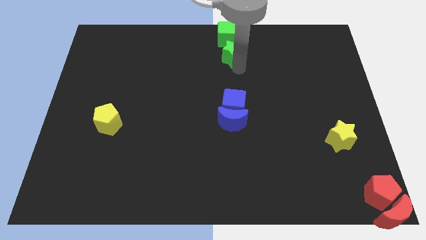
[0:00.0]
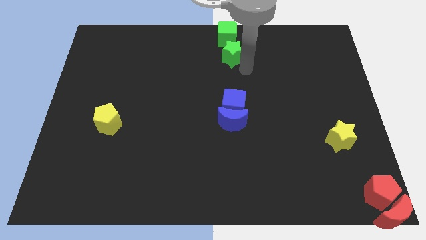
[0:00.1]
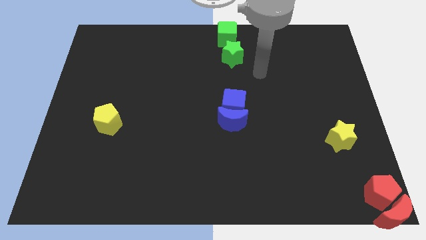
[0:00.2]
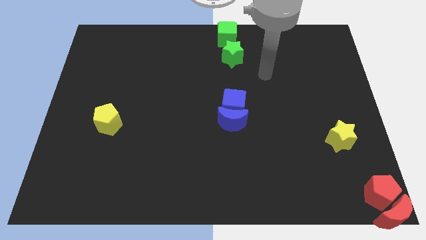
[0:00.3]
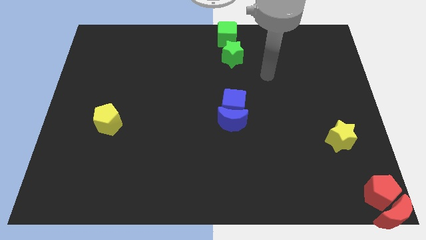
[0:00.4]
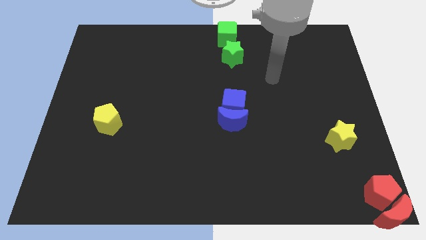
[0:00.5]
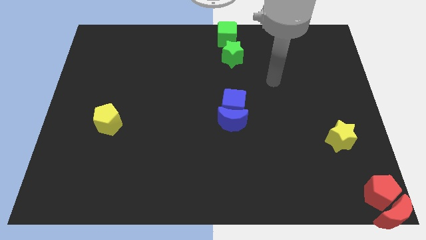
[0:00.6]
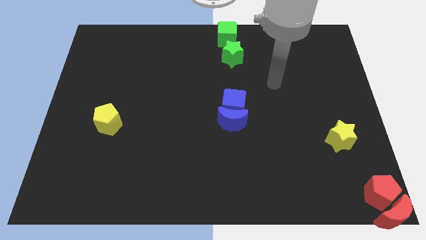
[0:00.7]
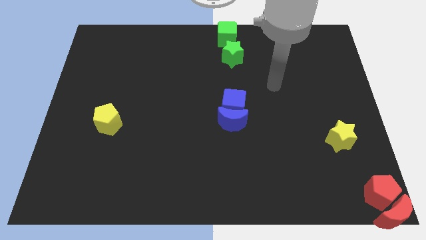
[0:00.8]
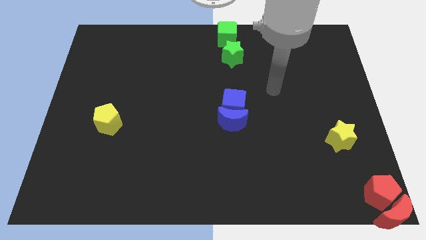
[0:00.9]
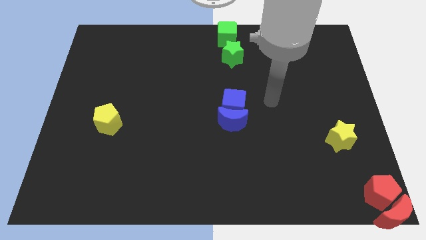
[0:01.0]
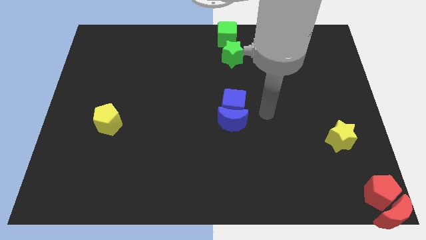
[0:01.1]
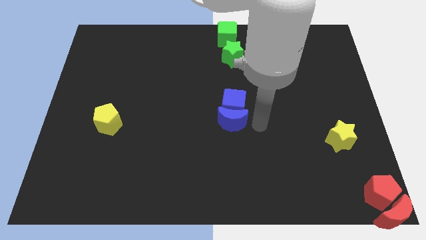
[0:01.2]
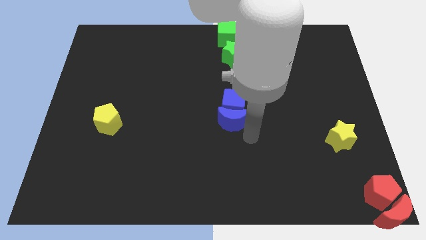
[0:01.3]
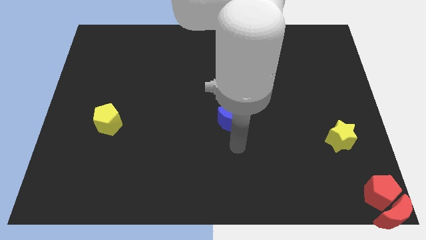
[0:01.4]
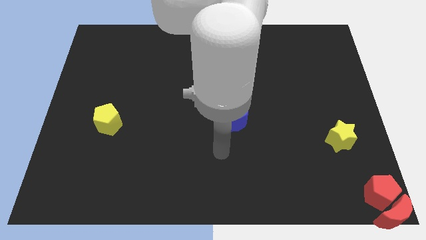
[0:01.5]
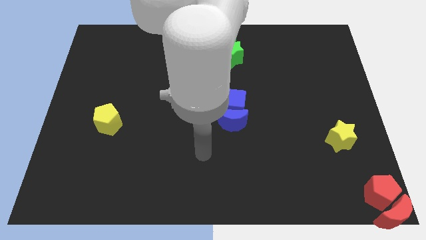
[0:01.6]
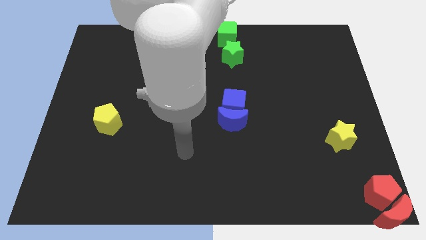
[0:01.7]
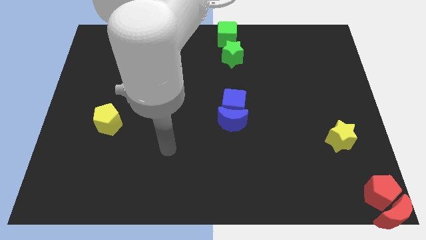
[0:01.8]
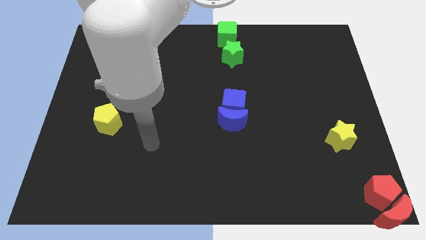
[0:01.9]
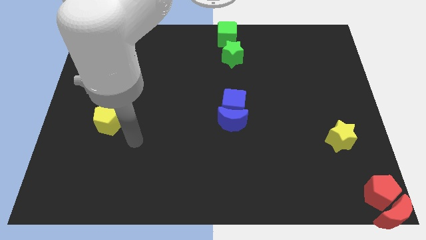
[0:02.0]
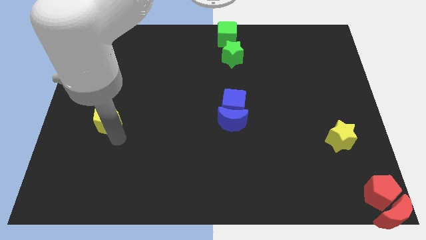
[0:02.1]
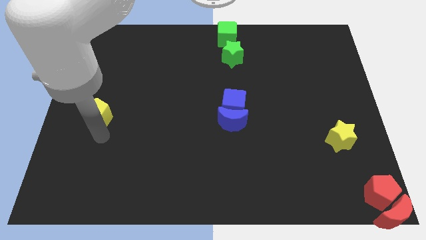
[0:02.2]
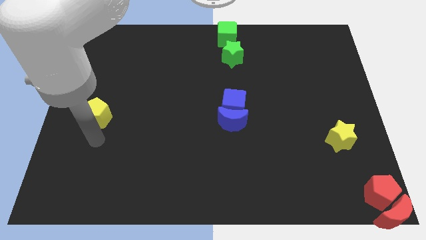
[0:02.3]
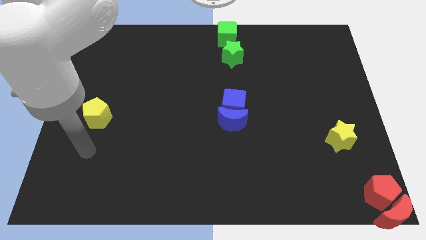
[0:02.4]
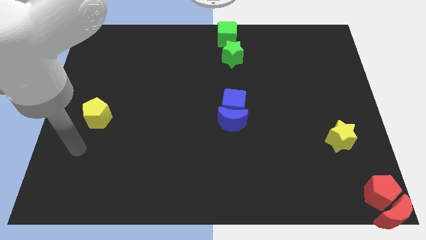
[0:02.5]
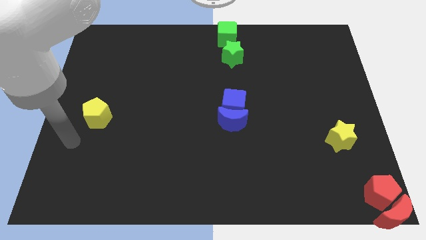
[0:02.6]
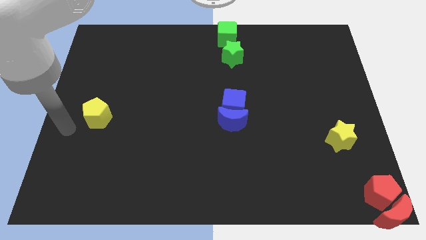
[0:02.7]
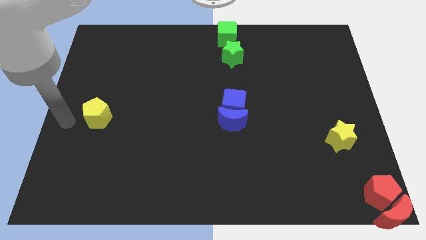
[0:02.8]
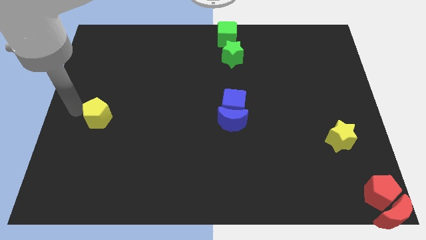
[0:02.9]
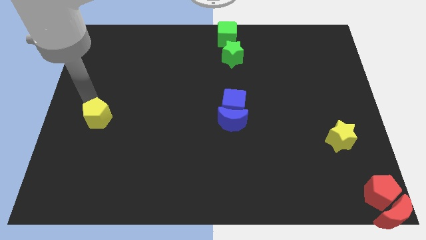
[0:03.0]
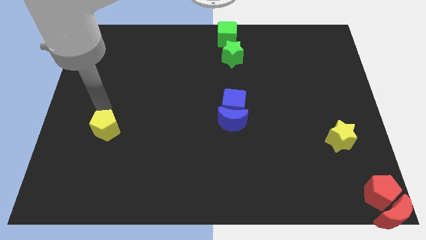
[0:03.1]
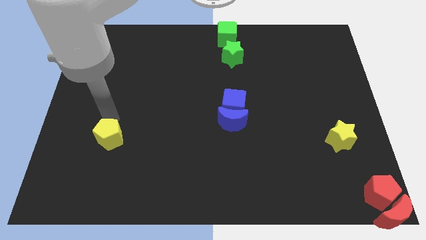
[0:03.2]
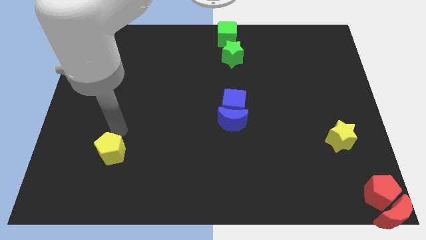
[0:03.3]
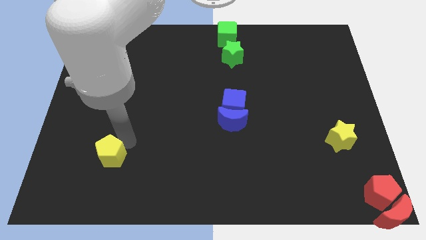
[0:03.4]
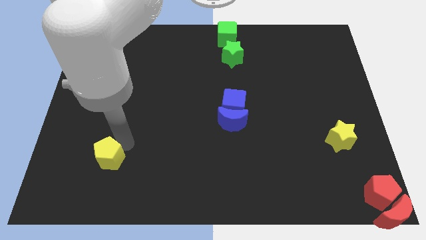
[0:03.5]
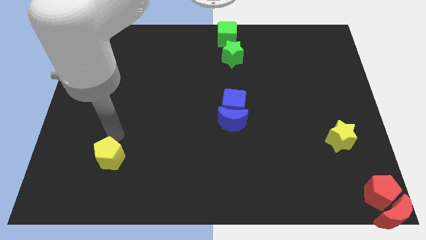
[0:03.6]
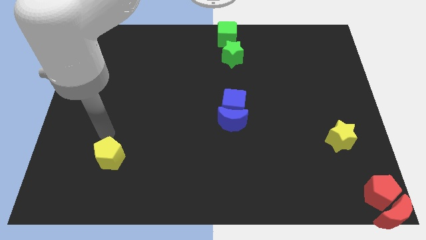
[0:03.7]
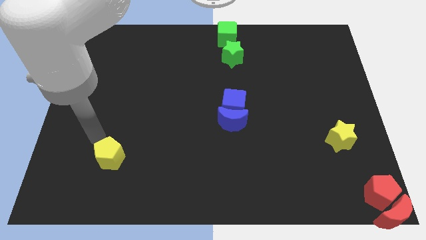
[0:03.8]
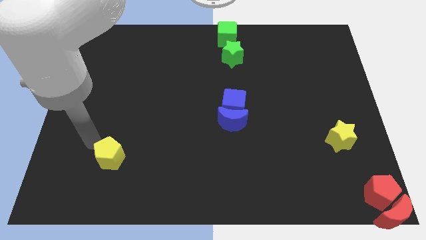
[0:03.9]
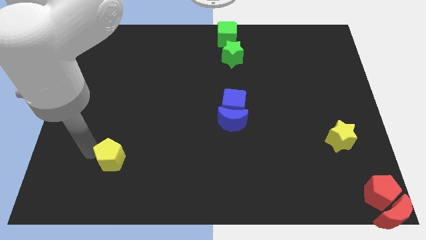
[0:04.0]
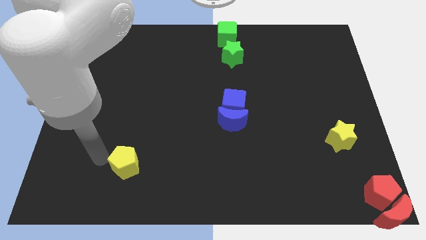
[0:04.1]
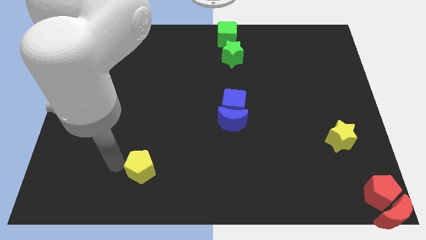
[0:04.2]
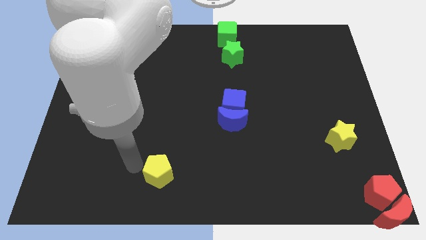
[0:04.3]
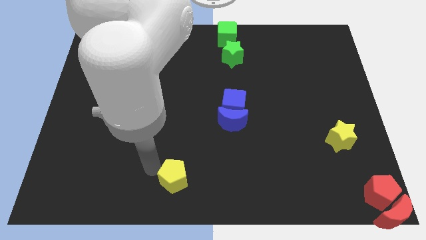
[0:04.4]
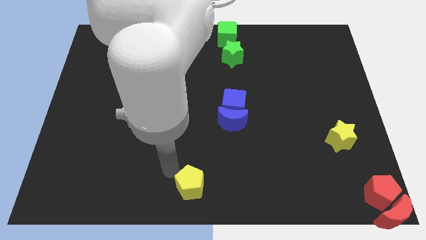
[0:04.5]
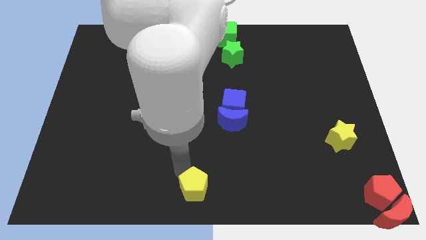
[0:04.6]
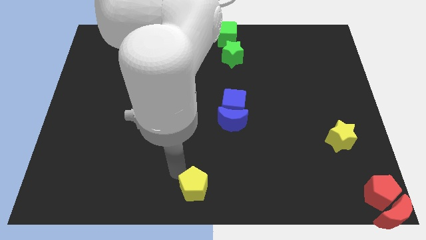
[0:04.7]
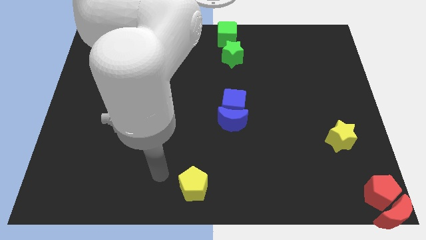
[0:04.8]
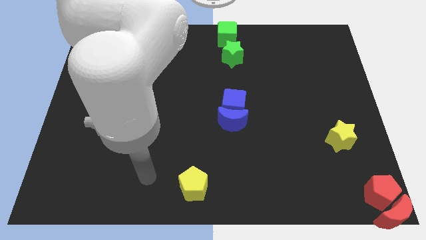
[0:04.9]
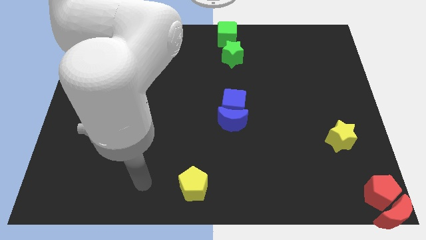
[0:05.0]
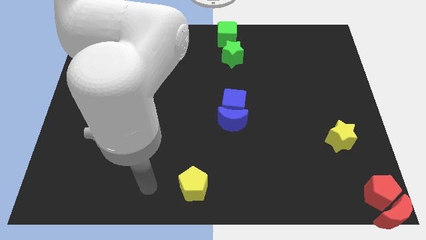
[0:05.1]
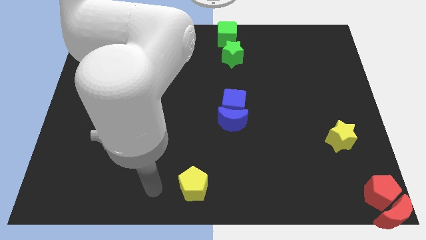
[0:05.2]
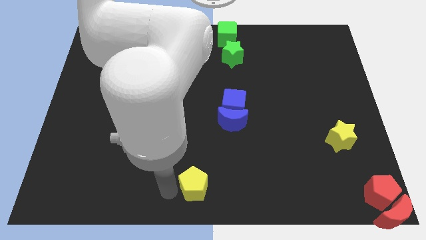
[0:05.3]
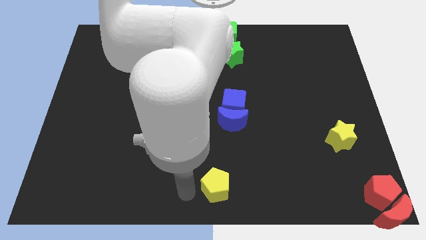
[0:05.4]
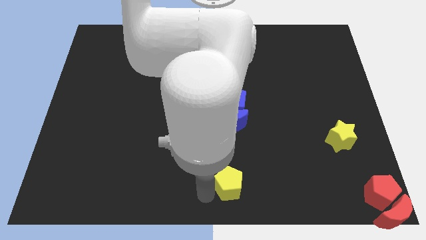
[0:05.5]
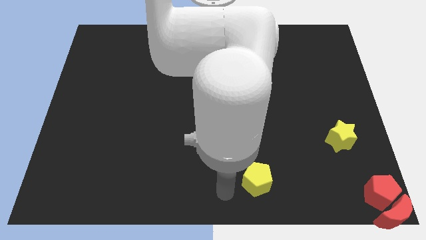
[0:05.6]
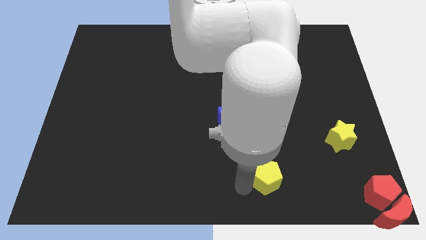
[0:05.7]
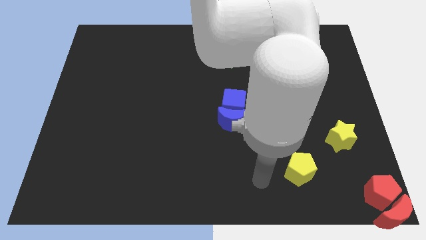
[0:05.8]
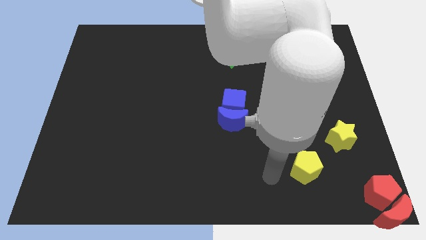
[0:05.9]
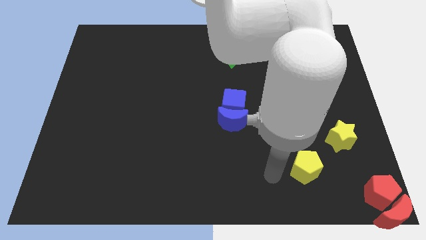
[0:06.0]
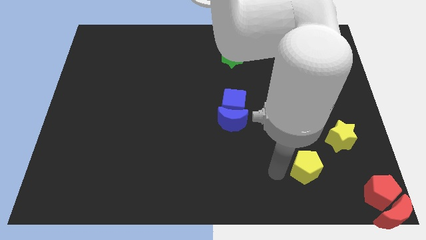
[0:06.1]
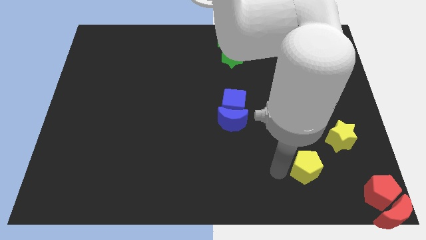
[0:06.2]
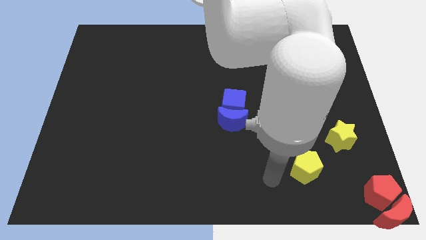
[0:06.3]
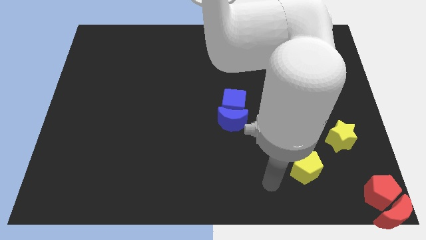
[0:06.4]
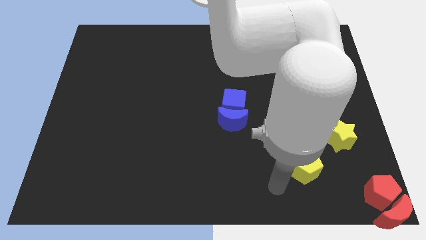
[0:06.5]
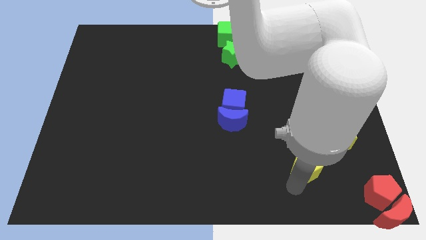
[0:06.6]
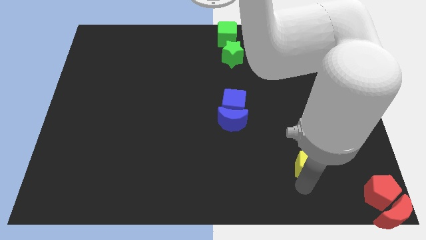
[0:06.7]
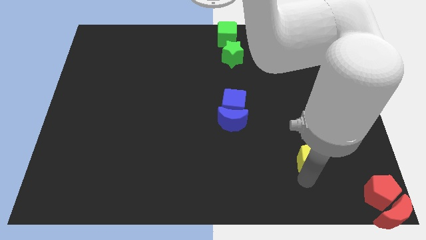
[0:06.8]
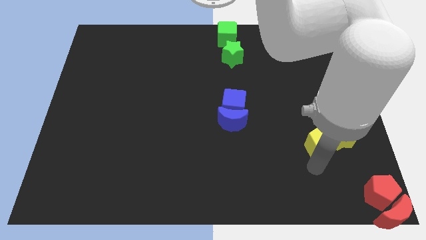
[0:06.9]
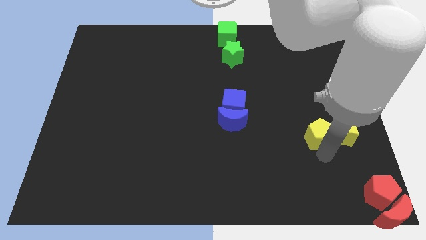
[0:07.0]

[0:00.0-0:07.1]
move the yellow pentagon to the left of the yellow star

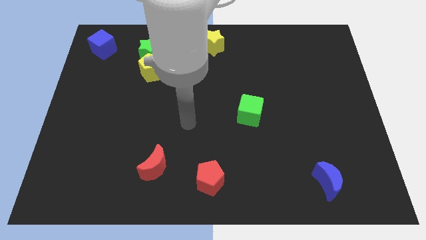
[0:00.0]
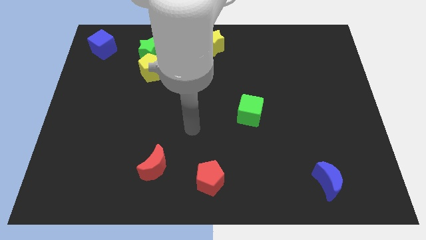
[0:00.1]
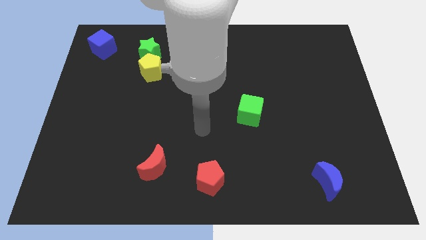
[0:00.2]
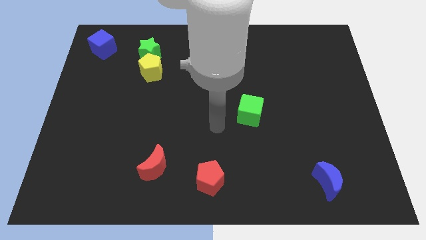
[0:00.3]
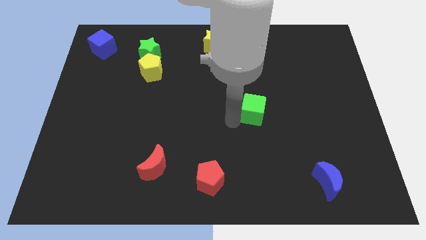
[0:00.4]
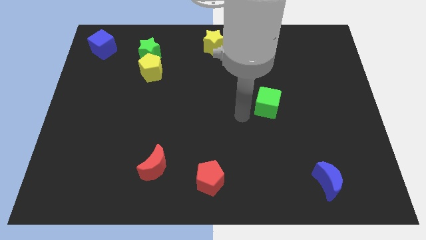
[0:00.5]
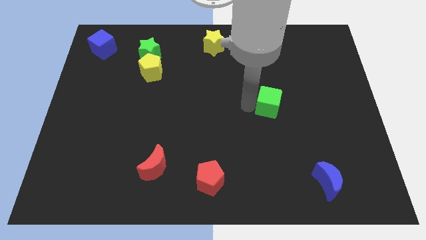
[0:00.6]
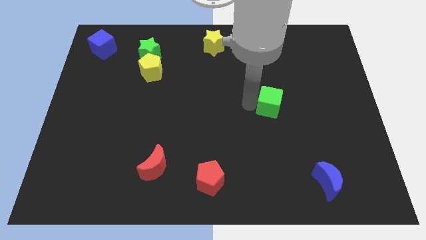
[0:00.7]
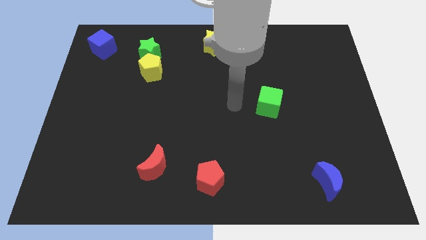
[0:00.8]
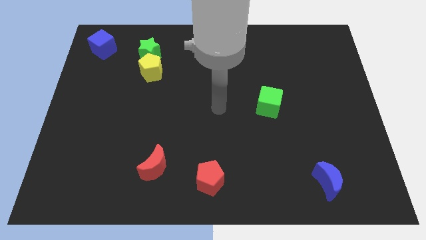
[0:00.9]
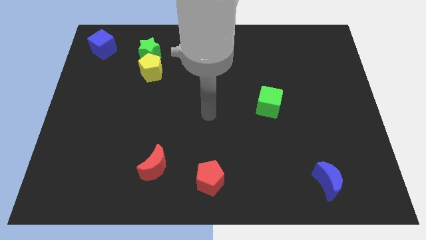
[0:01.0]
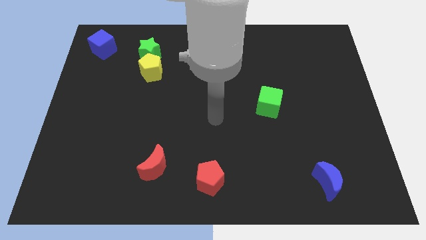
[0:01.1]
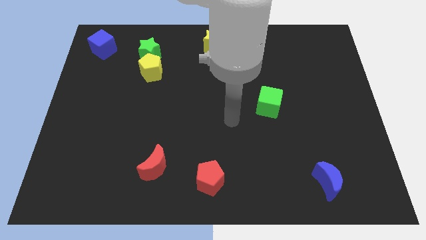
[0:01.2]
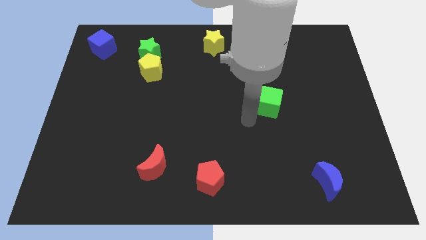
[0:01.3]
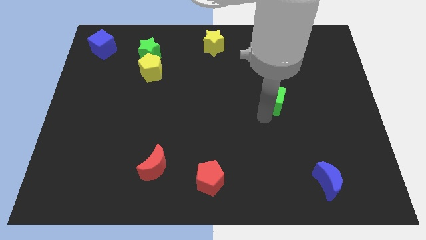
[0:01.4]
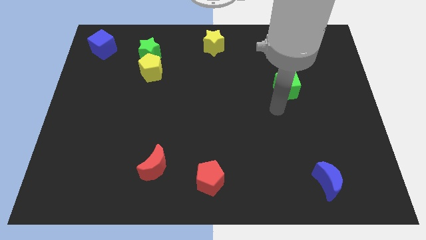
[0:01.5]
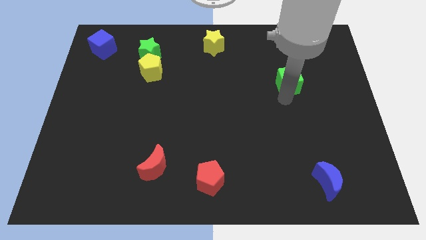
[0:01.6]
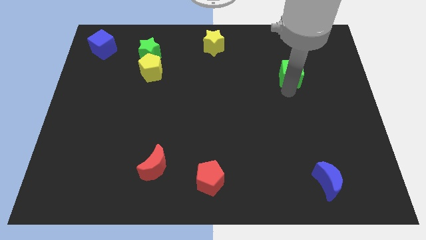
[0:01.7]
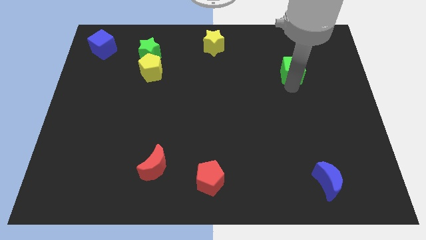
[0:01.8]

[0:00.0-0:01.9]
place the green cube above the blue moon
